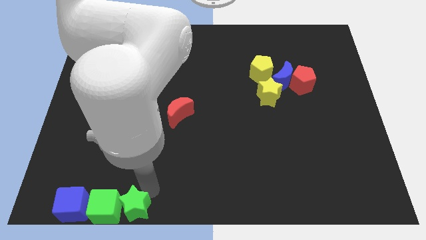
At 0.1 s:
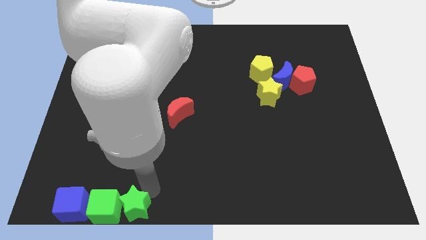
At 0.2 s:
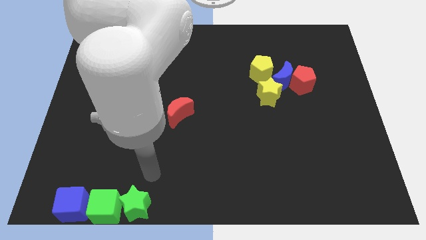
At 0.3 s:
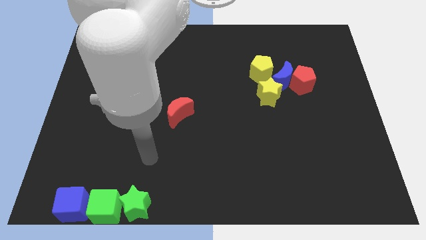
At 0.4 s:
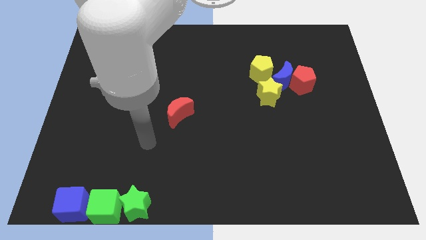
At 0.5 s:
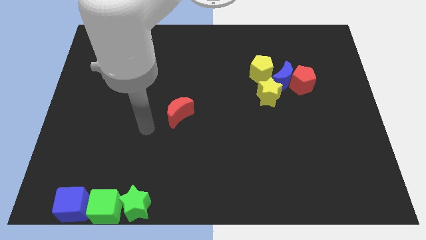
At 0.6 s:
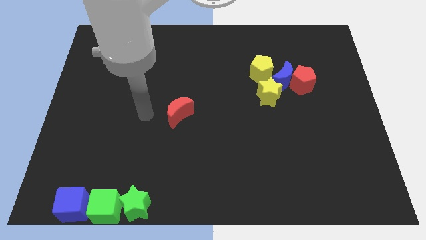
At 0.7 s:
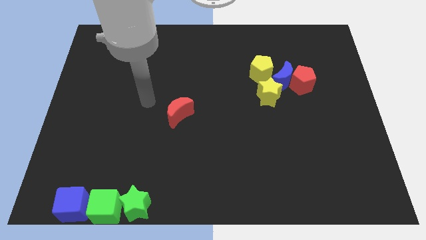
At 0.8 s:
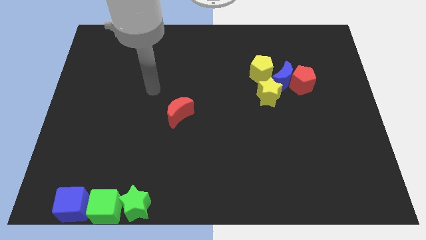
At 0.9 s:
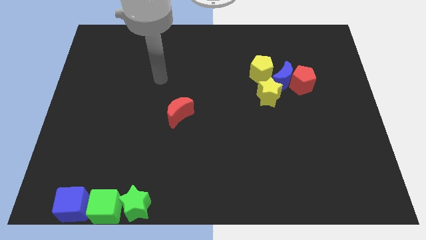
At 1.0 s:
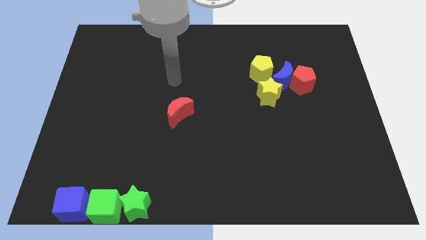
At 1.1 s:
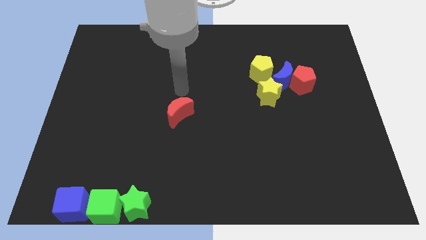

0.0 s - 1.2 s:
point your arm at the top of the red crescent

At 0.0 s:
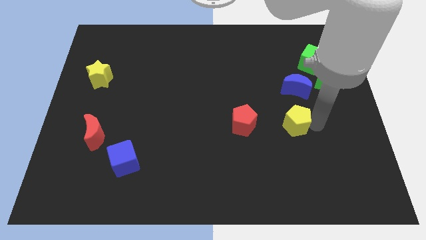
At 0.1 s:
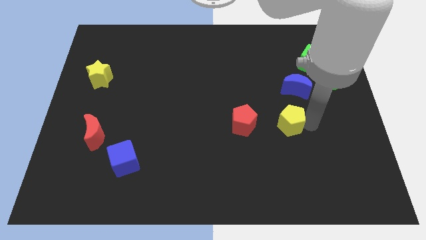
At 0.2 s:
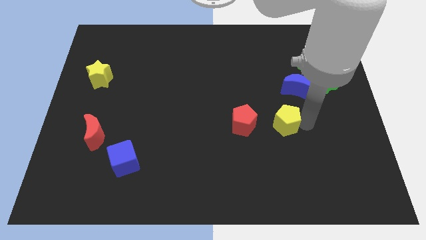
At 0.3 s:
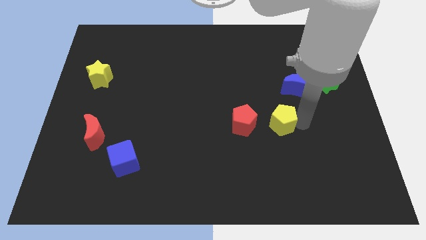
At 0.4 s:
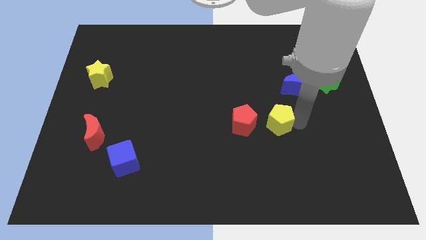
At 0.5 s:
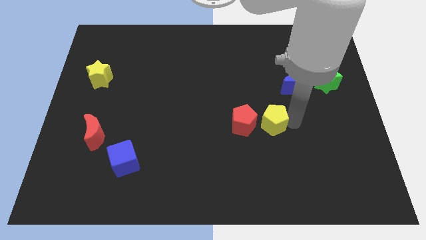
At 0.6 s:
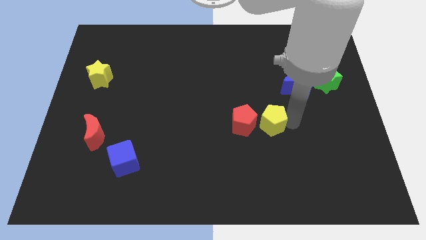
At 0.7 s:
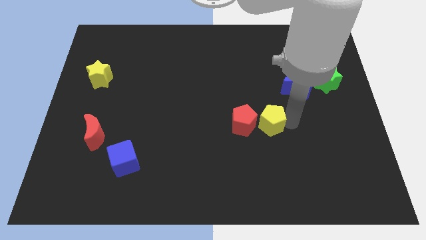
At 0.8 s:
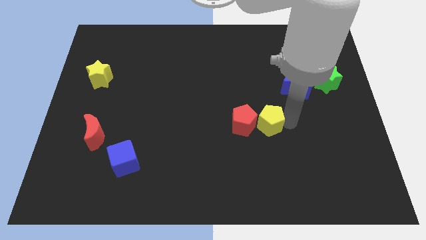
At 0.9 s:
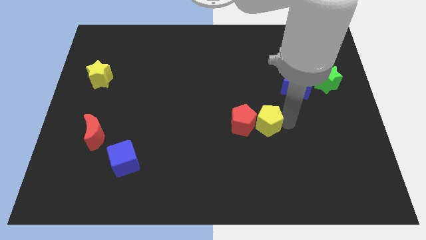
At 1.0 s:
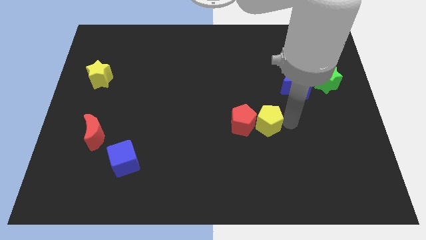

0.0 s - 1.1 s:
push yellow pentagon in to red pentagon

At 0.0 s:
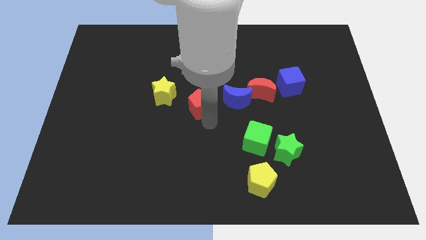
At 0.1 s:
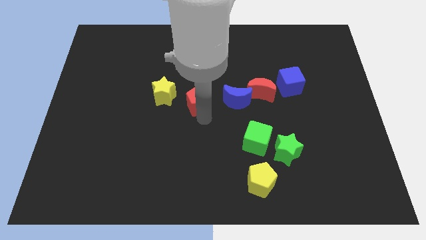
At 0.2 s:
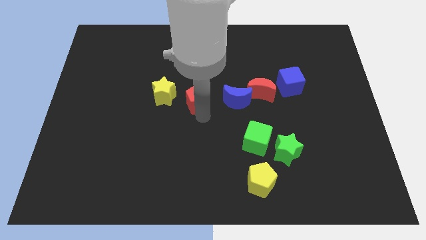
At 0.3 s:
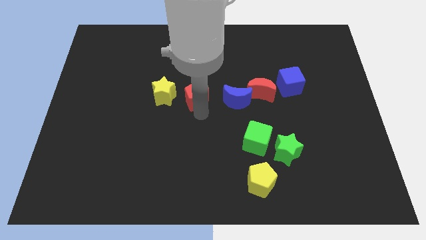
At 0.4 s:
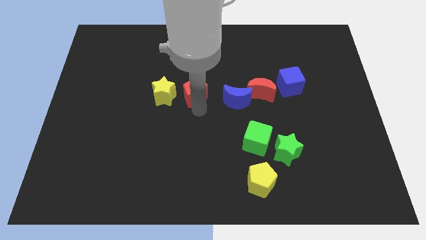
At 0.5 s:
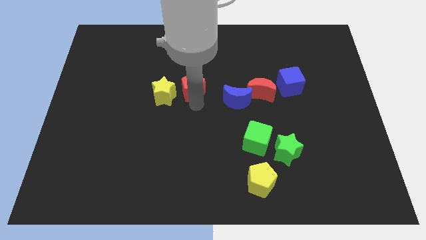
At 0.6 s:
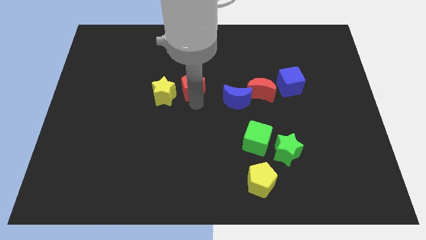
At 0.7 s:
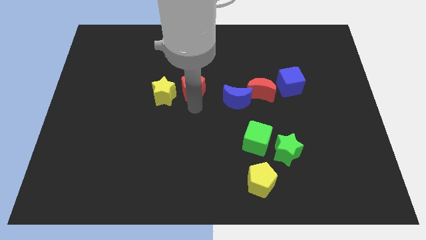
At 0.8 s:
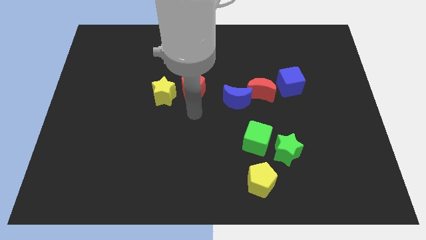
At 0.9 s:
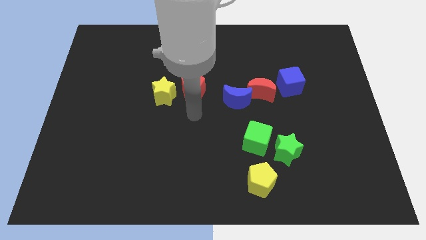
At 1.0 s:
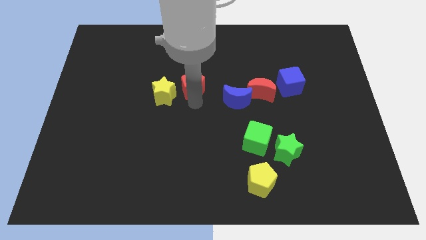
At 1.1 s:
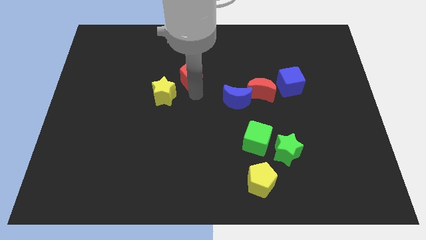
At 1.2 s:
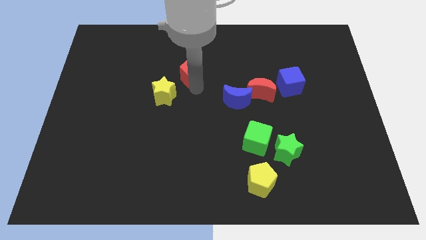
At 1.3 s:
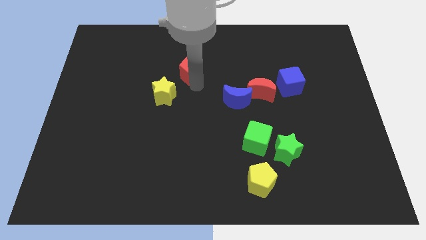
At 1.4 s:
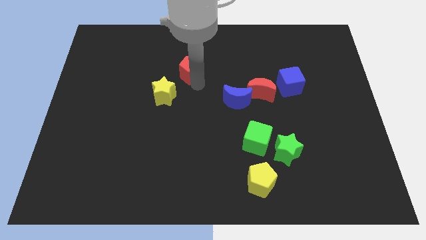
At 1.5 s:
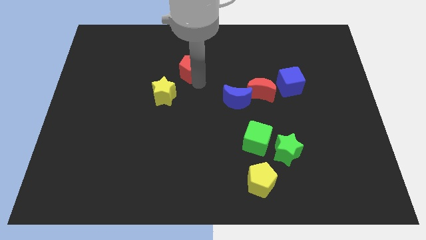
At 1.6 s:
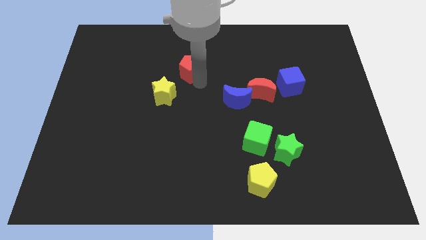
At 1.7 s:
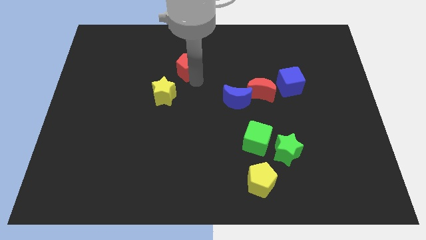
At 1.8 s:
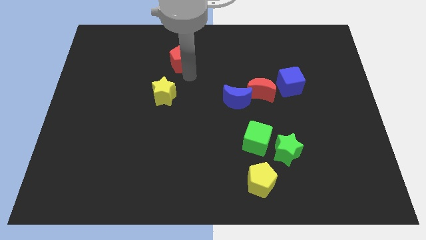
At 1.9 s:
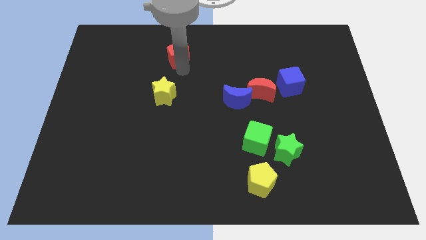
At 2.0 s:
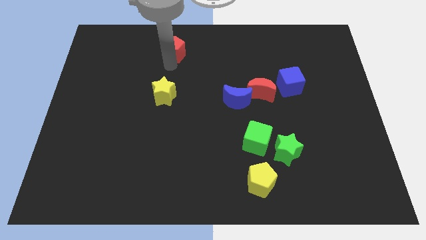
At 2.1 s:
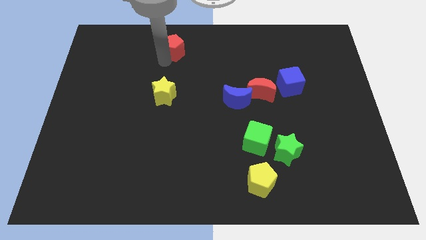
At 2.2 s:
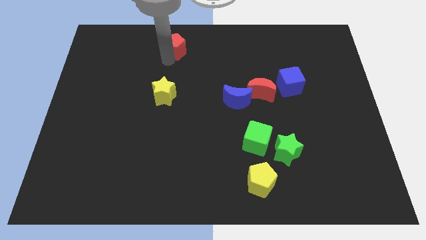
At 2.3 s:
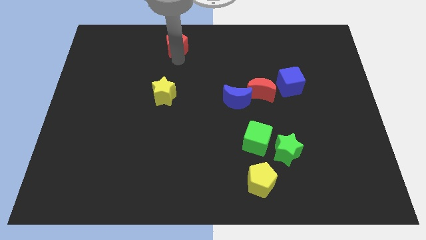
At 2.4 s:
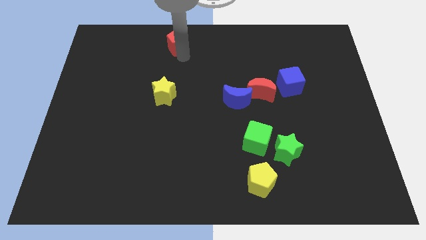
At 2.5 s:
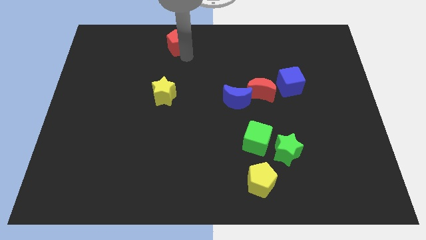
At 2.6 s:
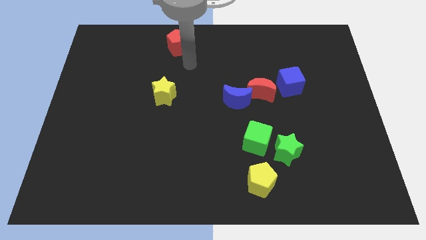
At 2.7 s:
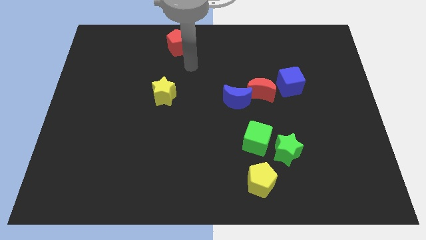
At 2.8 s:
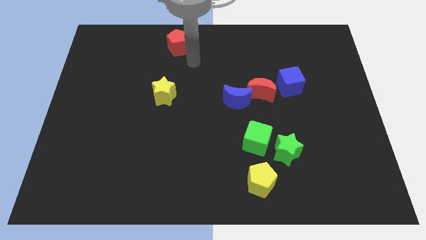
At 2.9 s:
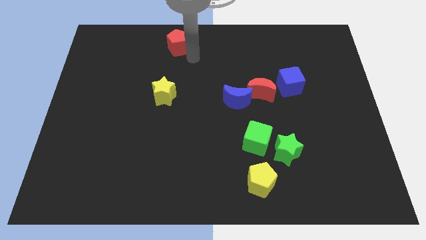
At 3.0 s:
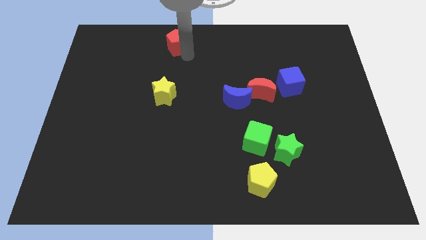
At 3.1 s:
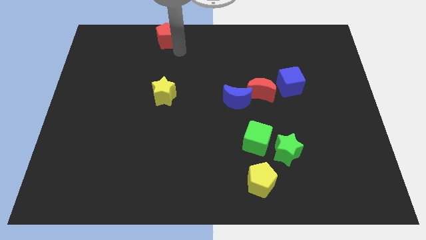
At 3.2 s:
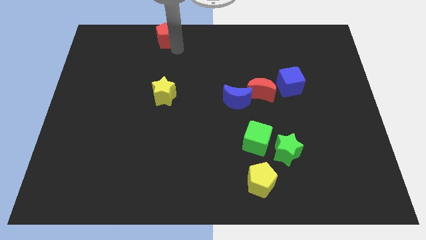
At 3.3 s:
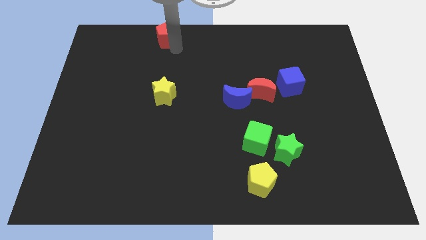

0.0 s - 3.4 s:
put red pentagon vertically above yellow star

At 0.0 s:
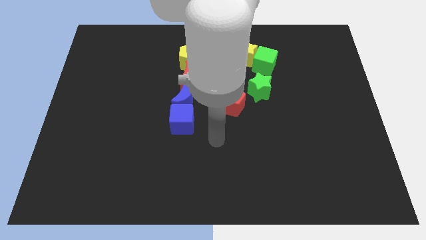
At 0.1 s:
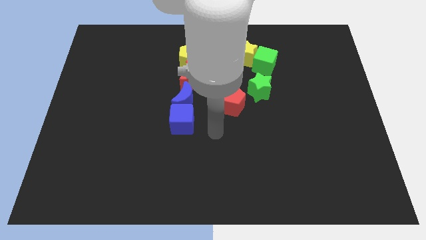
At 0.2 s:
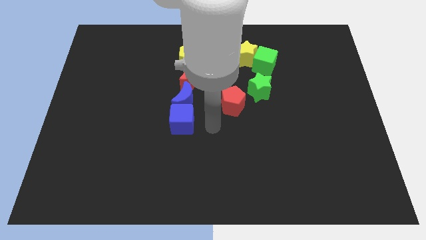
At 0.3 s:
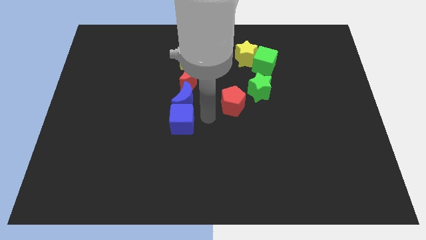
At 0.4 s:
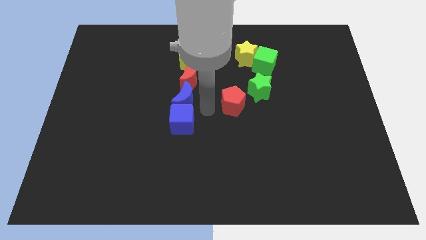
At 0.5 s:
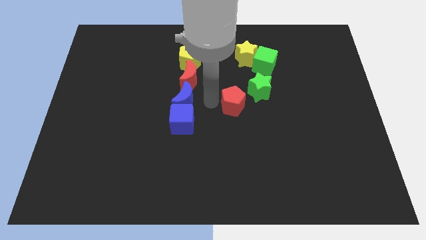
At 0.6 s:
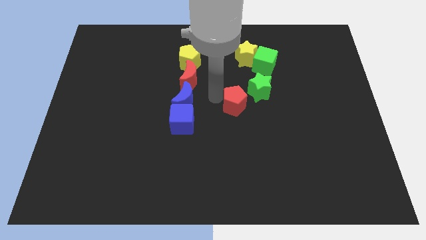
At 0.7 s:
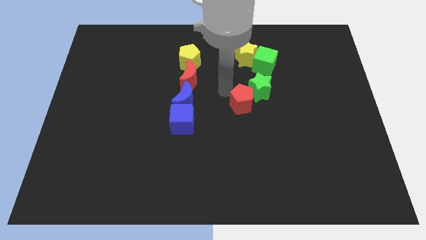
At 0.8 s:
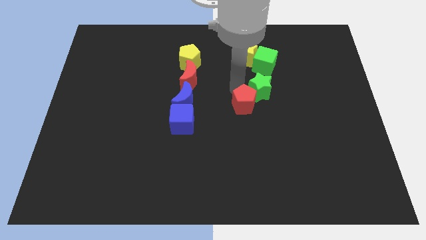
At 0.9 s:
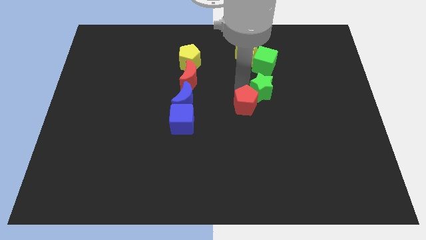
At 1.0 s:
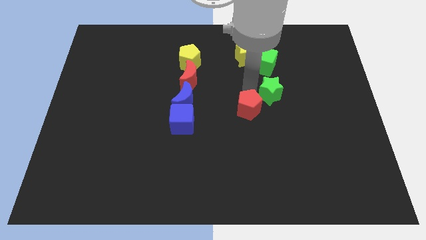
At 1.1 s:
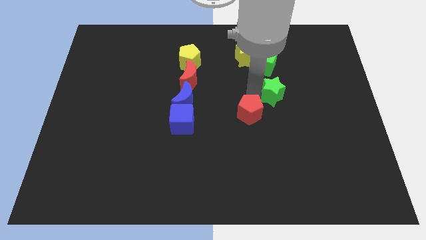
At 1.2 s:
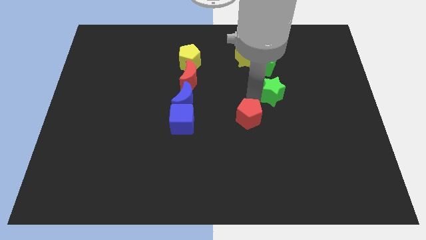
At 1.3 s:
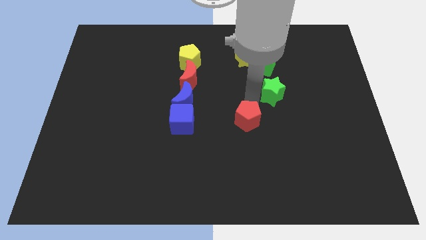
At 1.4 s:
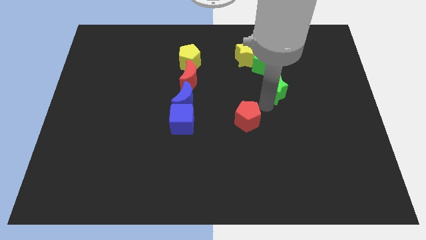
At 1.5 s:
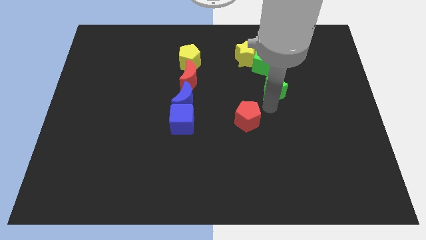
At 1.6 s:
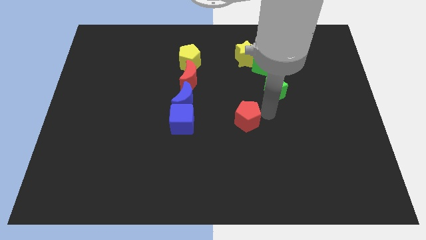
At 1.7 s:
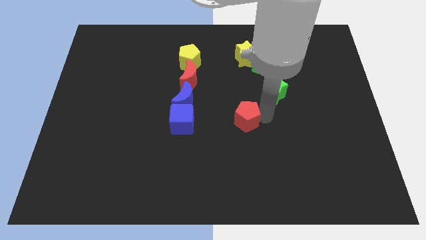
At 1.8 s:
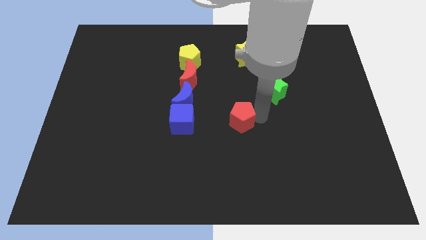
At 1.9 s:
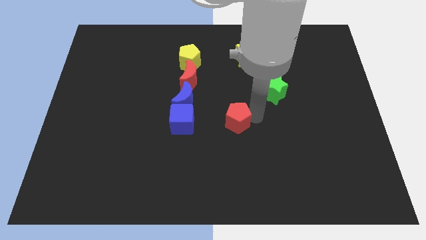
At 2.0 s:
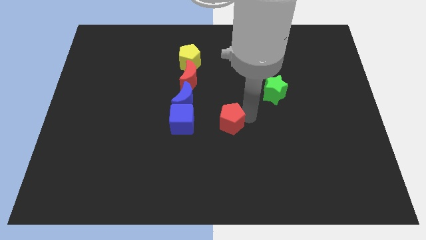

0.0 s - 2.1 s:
place the red pentagon right to the blue cube

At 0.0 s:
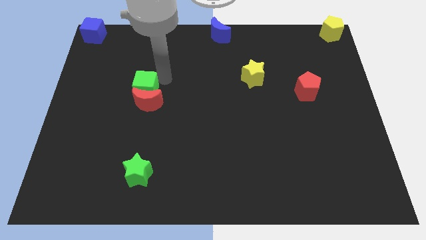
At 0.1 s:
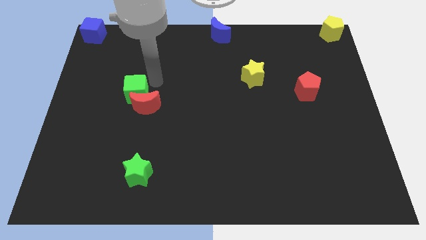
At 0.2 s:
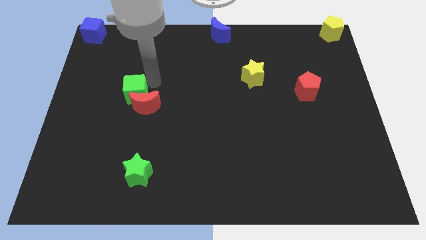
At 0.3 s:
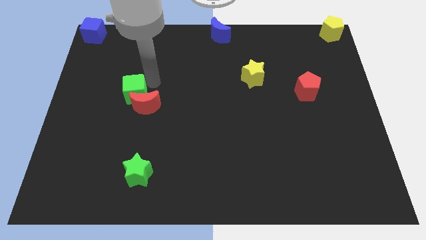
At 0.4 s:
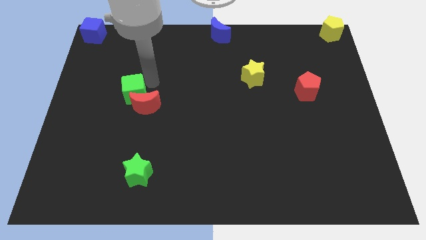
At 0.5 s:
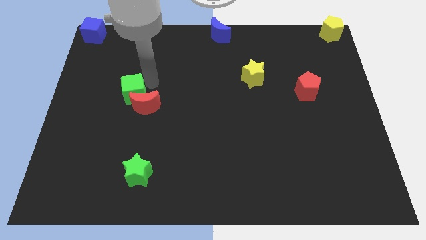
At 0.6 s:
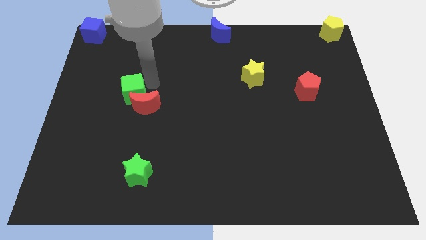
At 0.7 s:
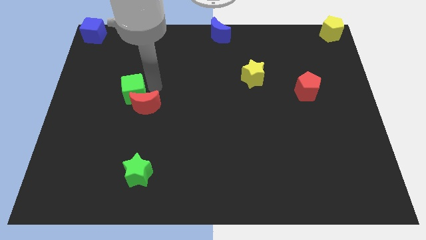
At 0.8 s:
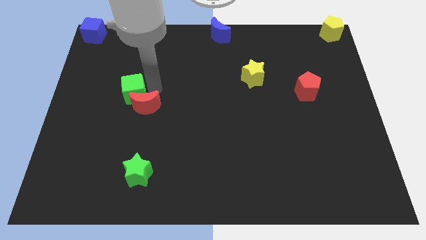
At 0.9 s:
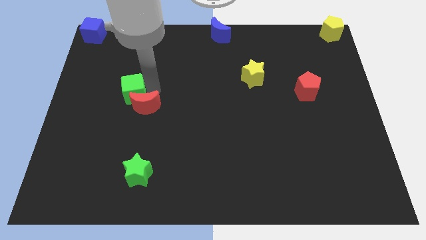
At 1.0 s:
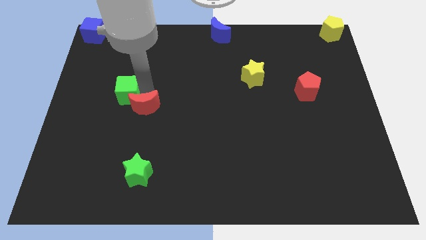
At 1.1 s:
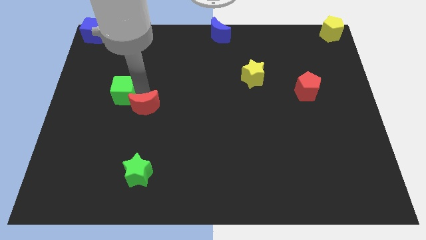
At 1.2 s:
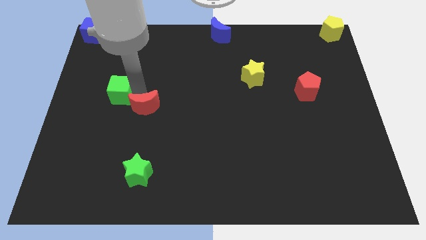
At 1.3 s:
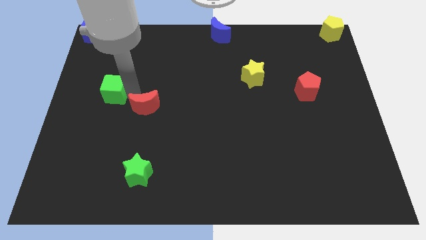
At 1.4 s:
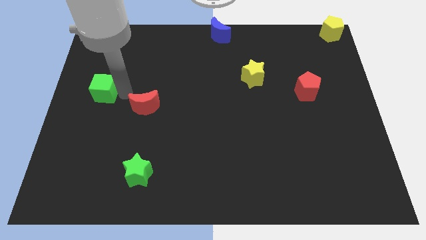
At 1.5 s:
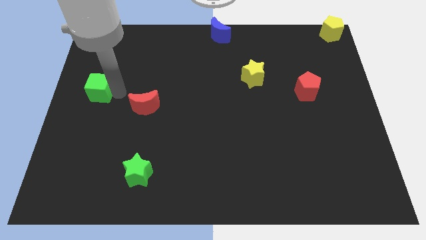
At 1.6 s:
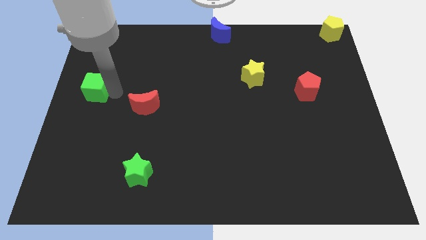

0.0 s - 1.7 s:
separate the green cube from the red crescent
